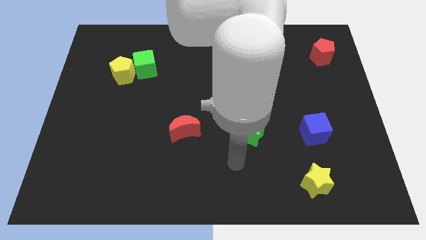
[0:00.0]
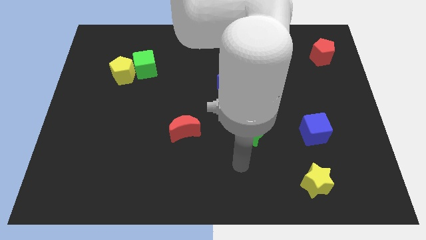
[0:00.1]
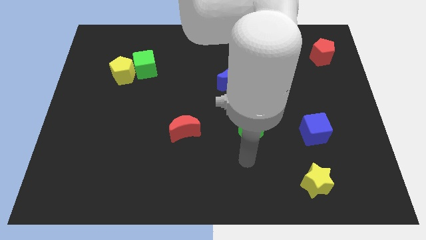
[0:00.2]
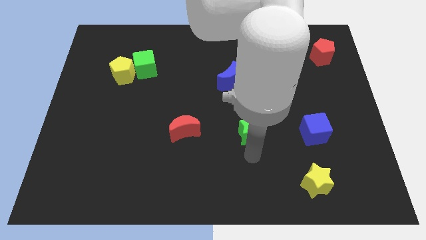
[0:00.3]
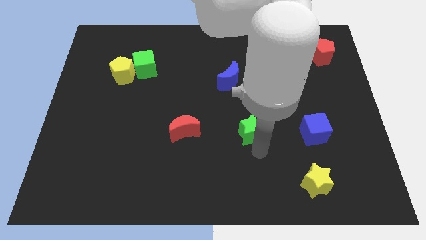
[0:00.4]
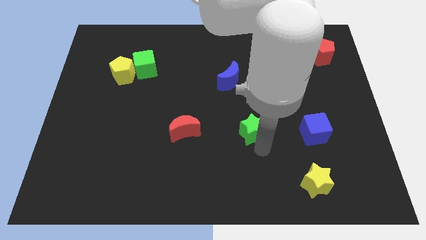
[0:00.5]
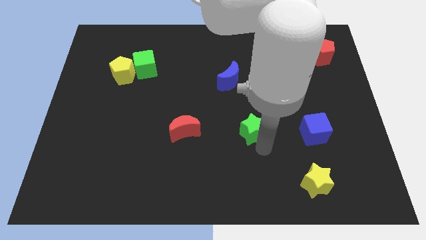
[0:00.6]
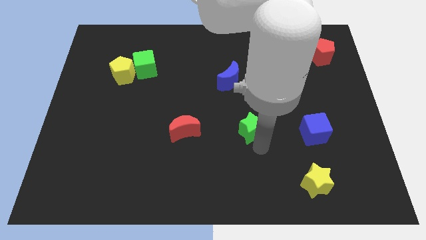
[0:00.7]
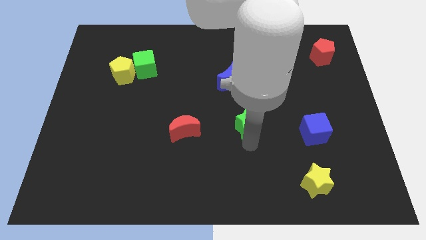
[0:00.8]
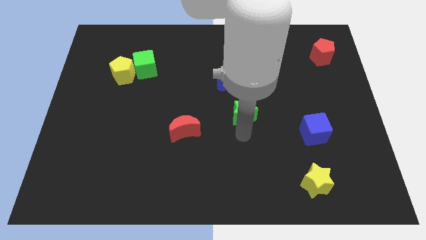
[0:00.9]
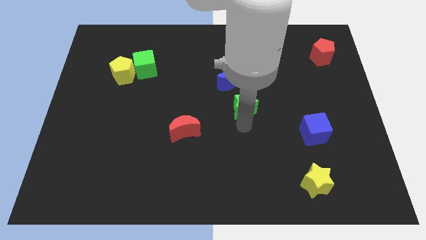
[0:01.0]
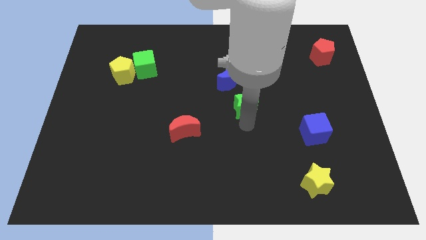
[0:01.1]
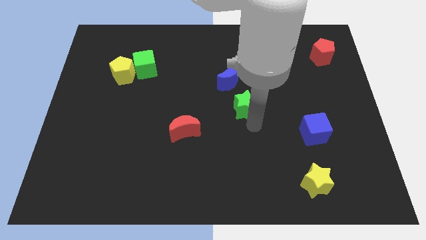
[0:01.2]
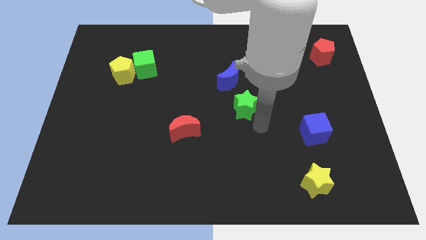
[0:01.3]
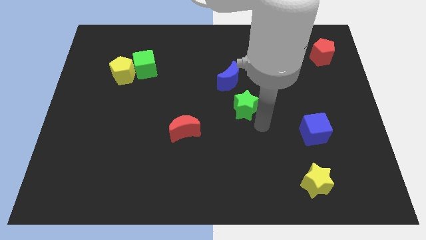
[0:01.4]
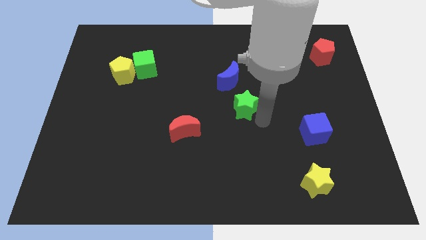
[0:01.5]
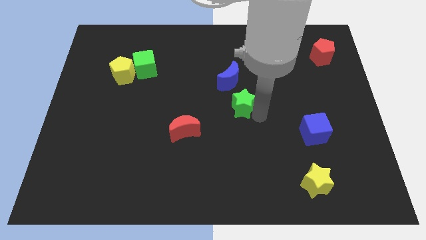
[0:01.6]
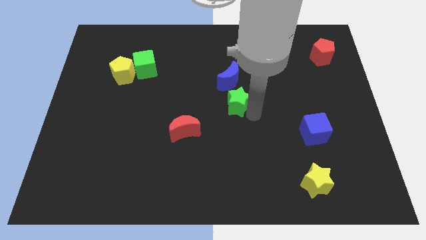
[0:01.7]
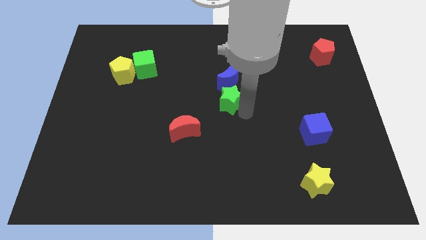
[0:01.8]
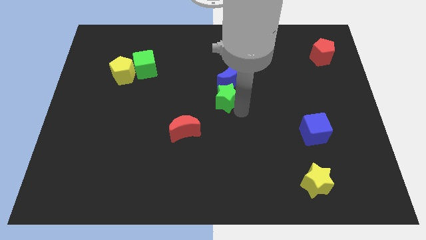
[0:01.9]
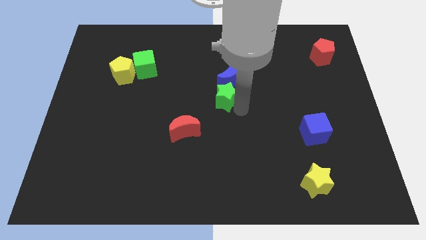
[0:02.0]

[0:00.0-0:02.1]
move the green star close to the bottom side of the blue crescent

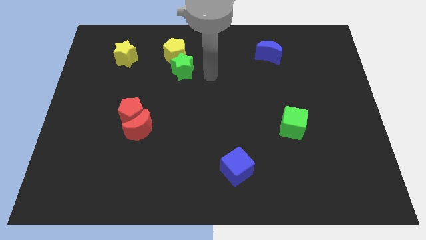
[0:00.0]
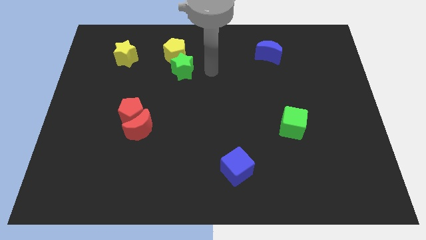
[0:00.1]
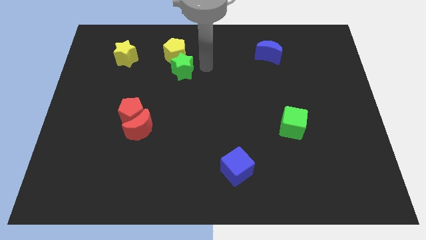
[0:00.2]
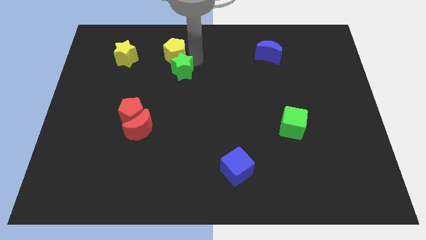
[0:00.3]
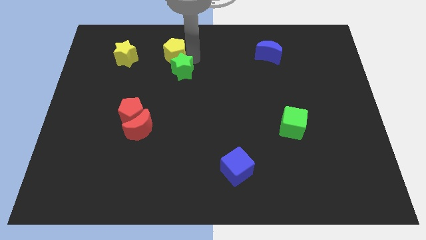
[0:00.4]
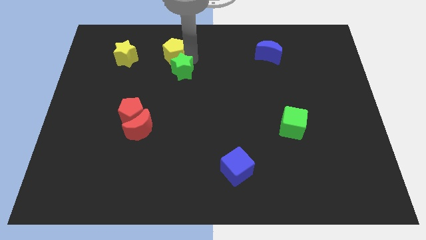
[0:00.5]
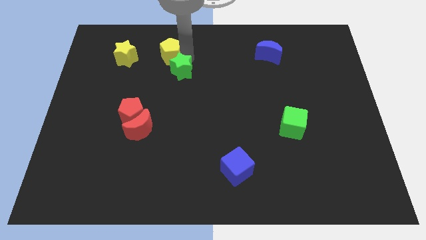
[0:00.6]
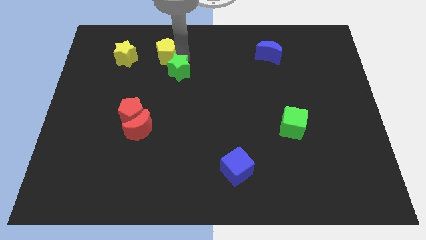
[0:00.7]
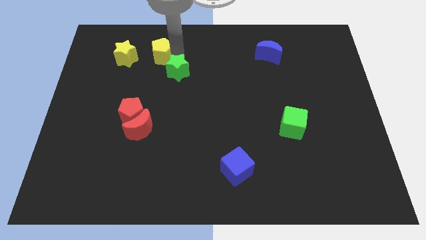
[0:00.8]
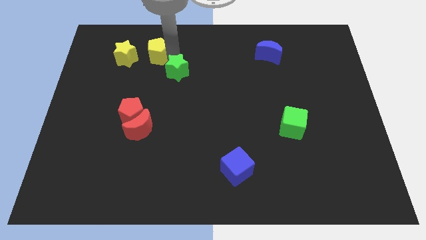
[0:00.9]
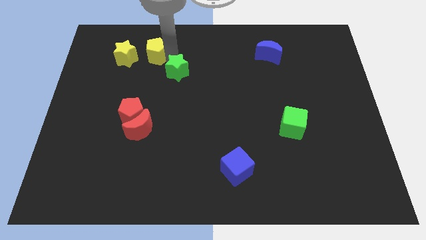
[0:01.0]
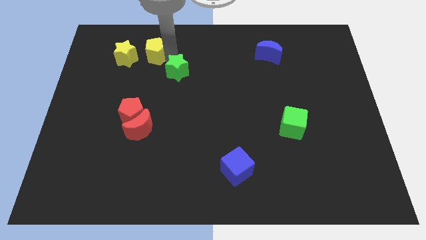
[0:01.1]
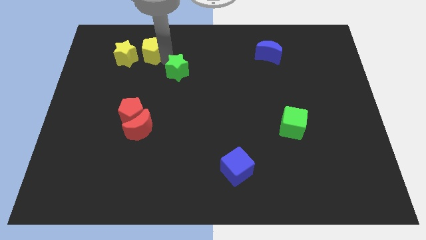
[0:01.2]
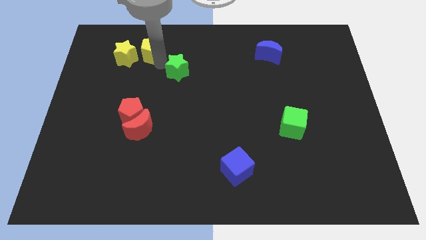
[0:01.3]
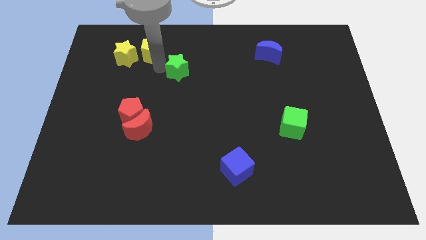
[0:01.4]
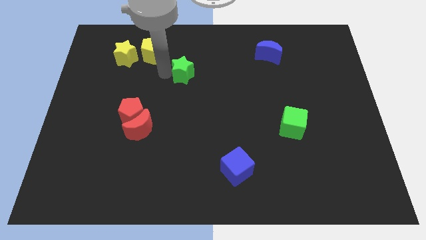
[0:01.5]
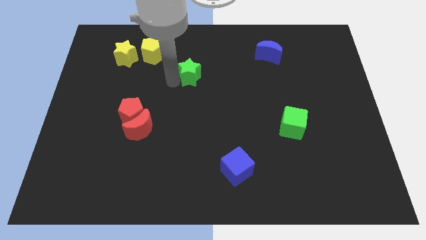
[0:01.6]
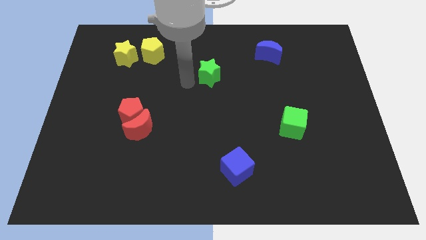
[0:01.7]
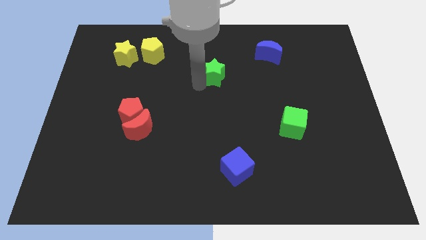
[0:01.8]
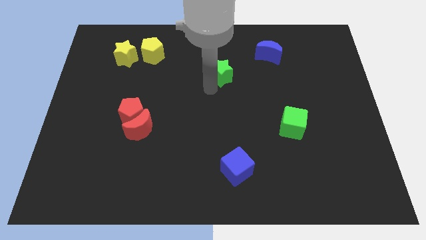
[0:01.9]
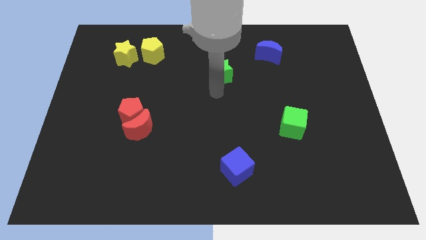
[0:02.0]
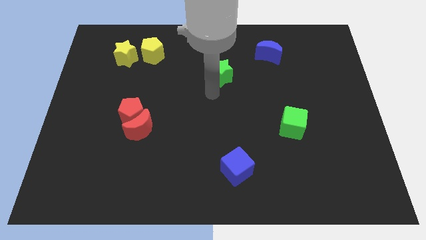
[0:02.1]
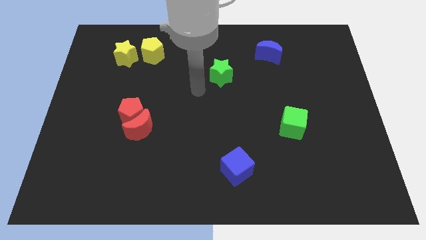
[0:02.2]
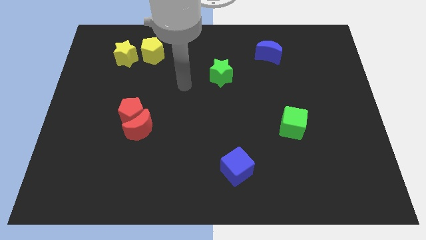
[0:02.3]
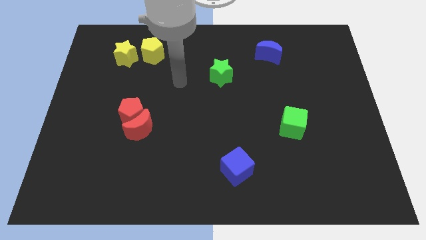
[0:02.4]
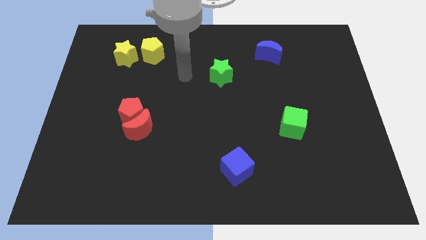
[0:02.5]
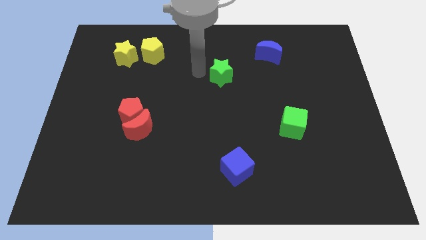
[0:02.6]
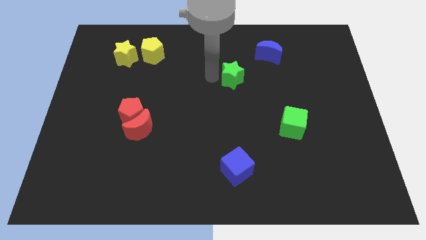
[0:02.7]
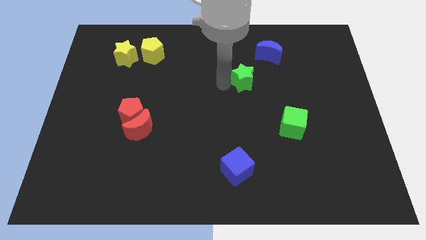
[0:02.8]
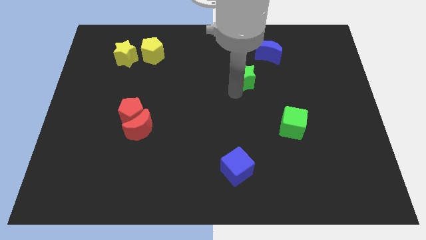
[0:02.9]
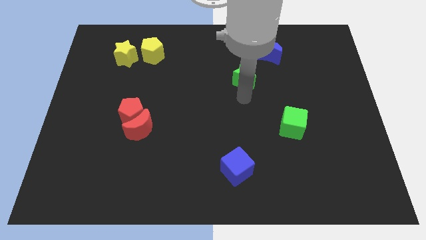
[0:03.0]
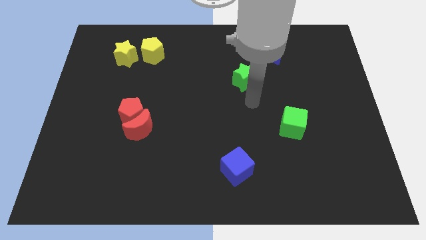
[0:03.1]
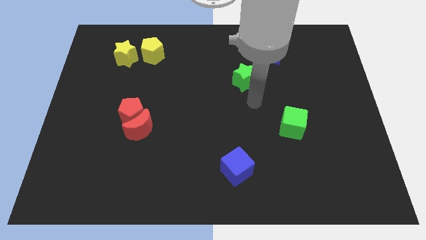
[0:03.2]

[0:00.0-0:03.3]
separate the green star from yellow pentagon

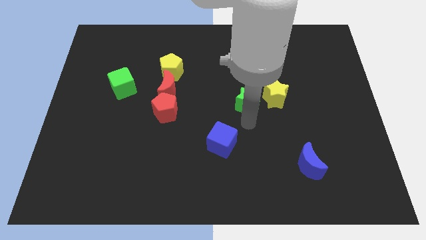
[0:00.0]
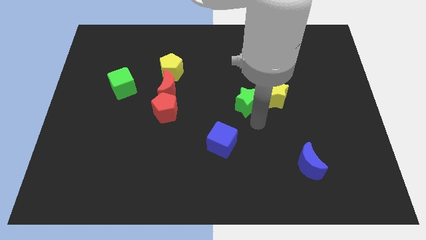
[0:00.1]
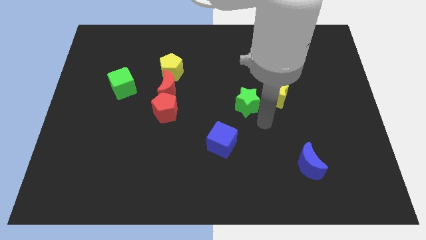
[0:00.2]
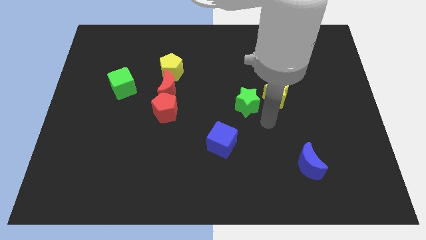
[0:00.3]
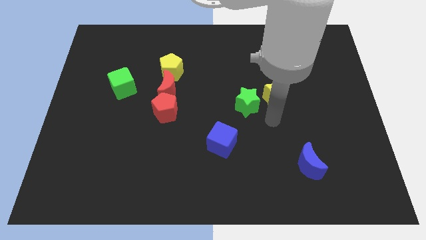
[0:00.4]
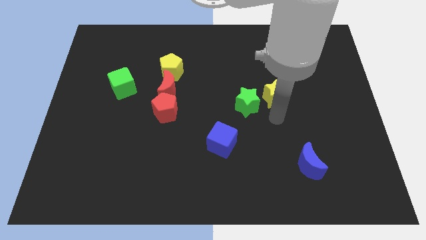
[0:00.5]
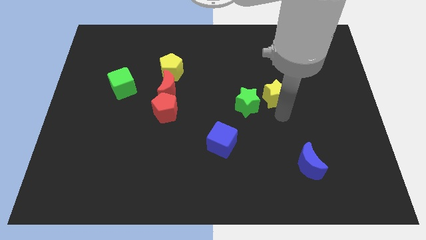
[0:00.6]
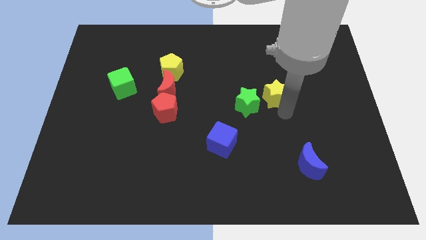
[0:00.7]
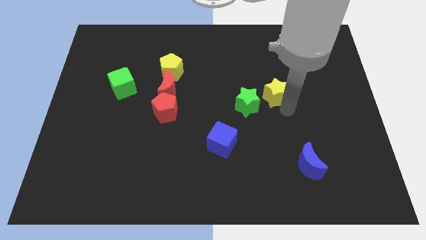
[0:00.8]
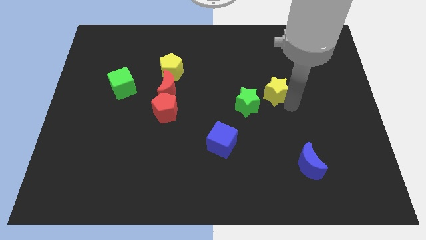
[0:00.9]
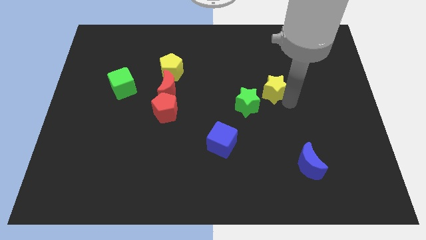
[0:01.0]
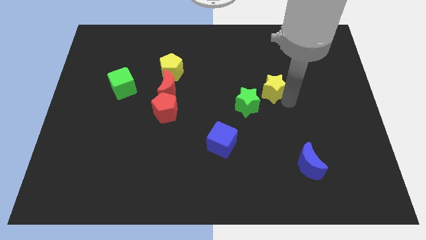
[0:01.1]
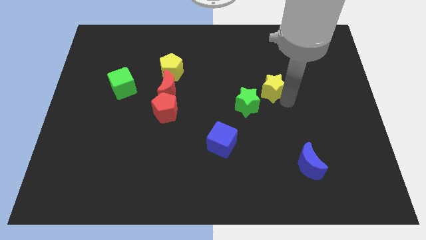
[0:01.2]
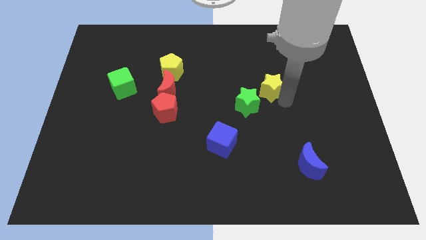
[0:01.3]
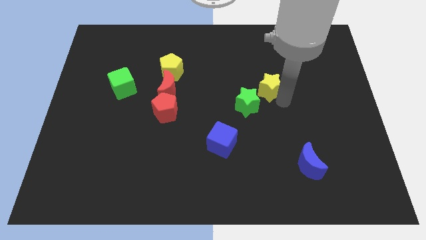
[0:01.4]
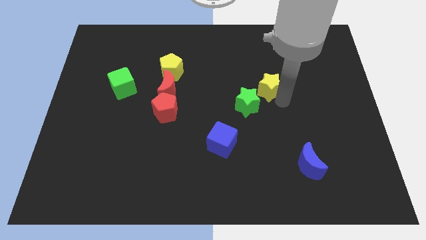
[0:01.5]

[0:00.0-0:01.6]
push the yellow star slightly to the top

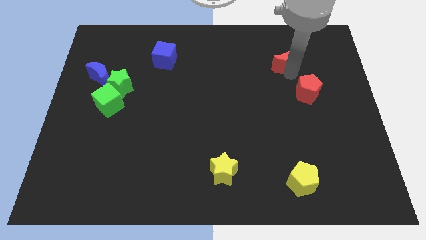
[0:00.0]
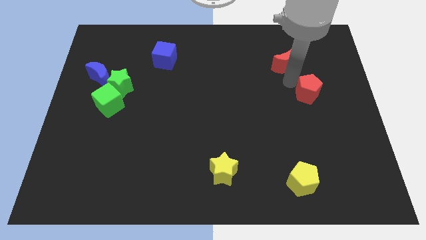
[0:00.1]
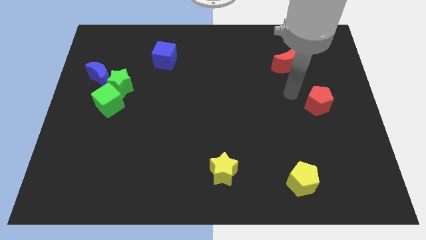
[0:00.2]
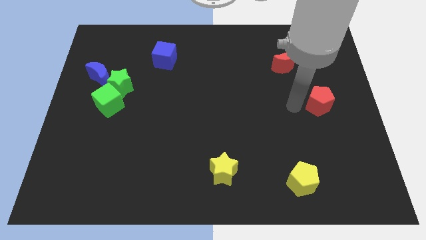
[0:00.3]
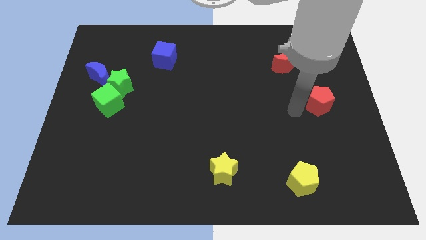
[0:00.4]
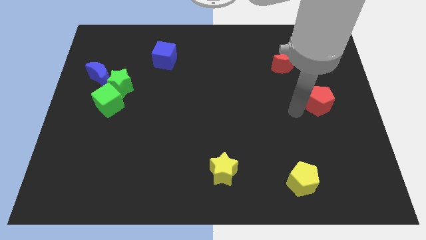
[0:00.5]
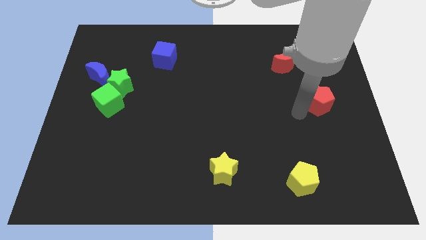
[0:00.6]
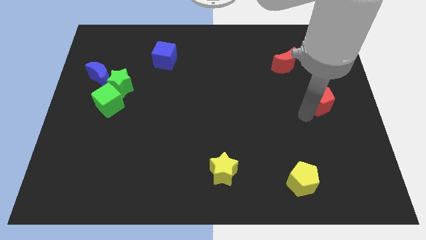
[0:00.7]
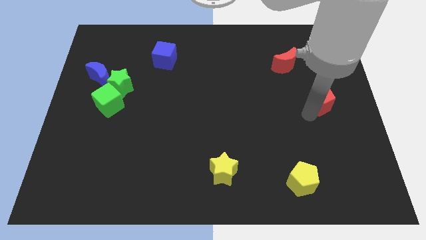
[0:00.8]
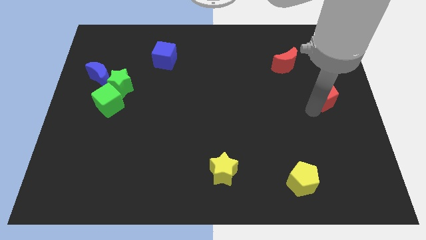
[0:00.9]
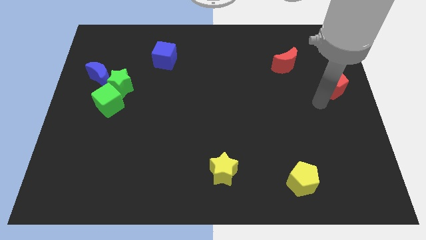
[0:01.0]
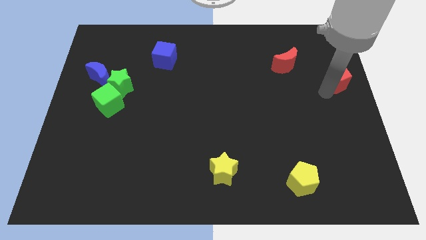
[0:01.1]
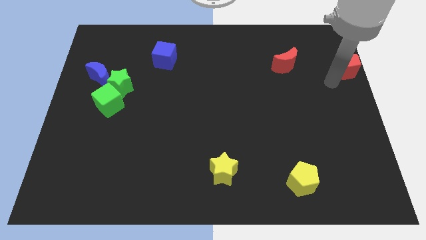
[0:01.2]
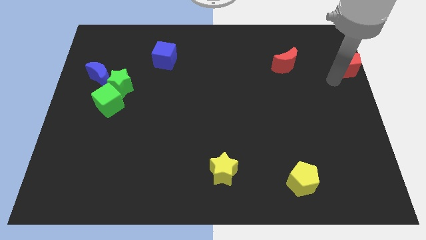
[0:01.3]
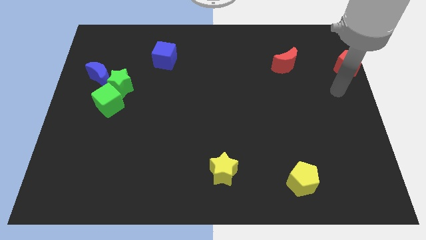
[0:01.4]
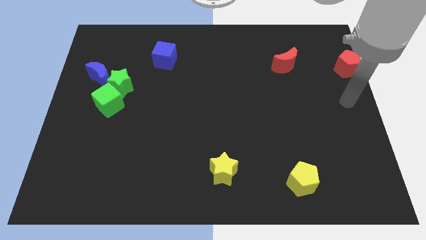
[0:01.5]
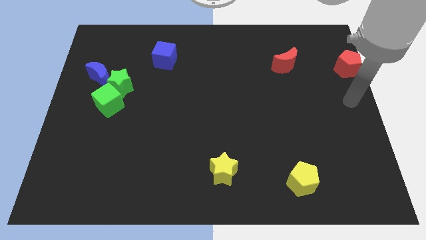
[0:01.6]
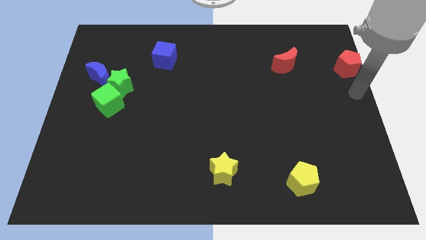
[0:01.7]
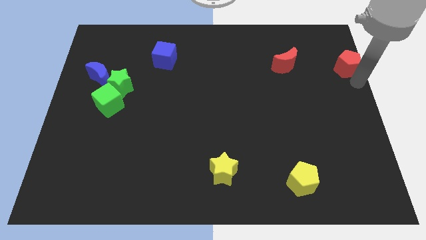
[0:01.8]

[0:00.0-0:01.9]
put the red pentagon horizontally right to the red moon

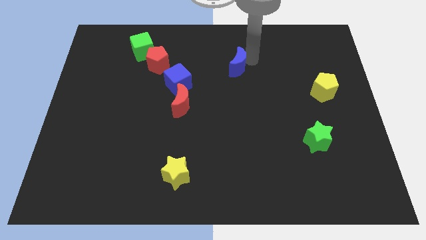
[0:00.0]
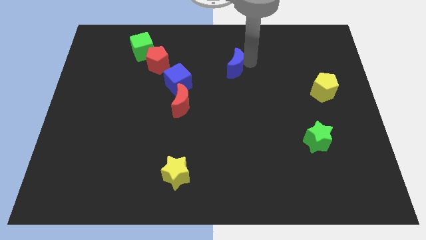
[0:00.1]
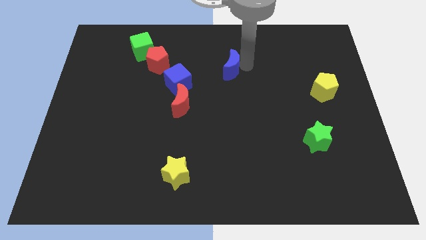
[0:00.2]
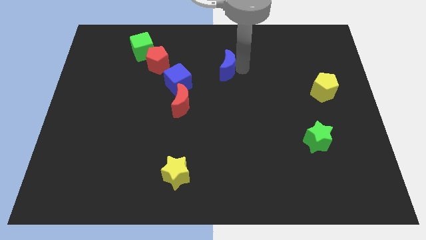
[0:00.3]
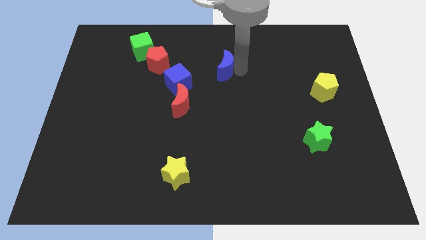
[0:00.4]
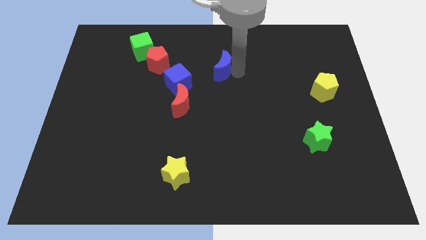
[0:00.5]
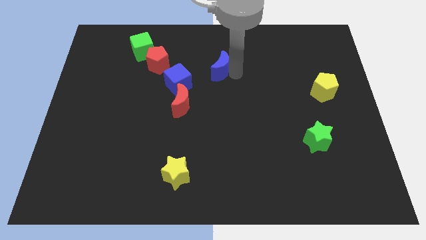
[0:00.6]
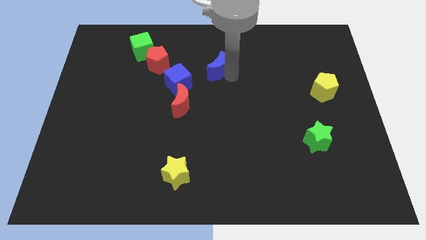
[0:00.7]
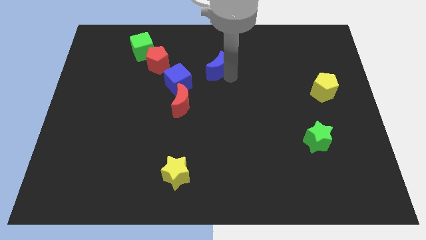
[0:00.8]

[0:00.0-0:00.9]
slightly move the blue crescent towards the blue cube
